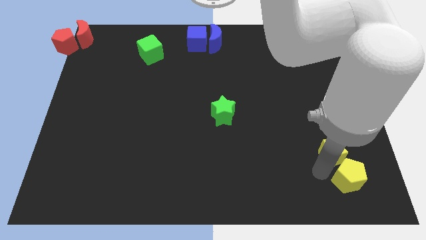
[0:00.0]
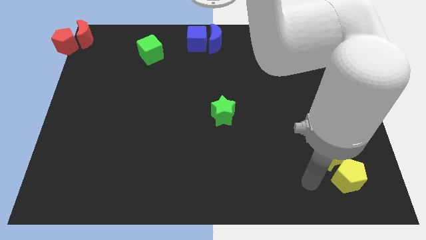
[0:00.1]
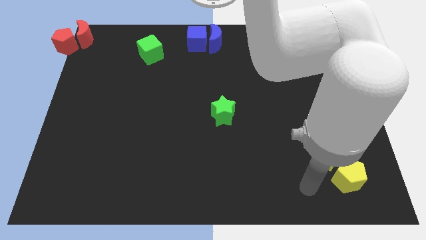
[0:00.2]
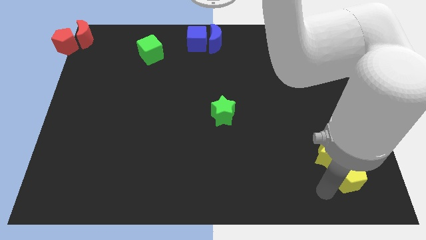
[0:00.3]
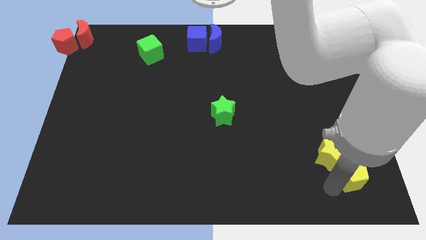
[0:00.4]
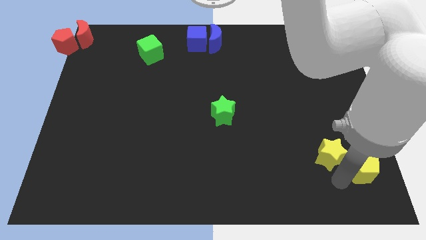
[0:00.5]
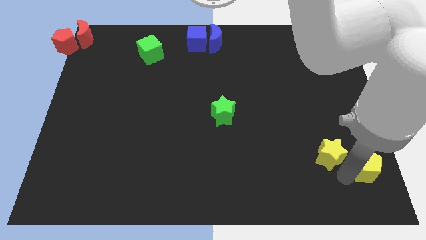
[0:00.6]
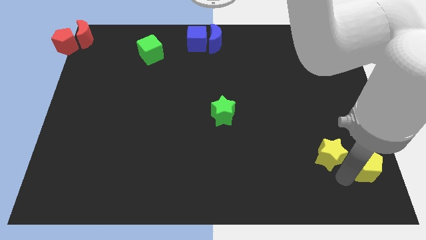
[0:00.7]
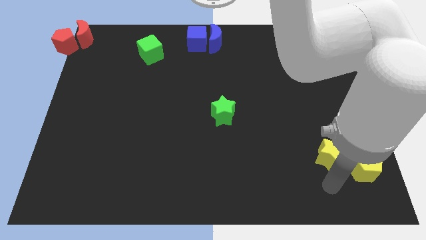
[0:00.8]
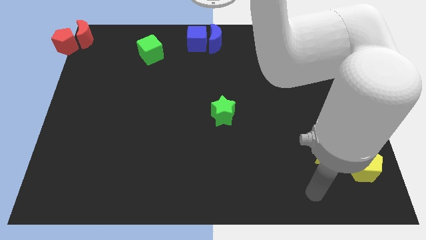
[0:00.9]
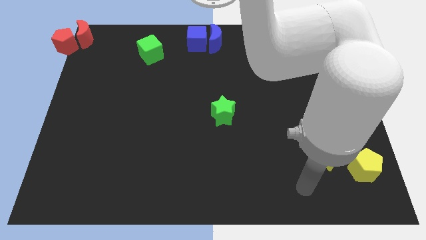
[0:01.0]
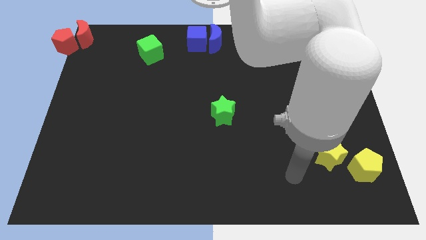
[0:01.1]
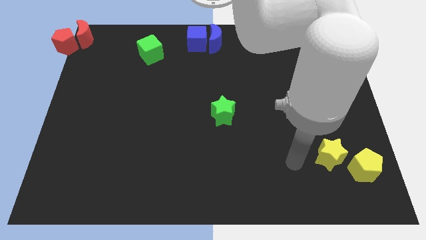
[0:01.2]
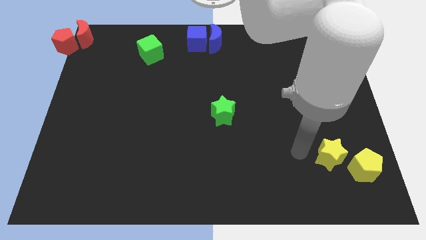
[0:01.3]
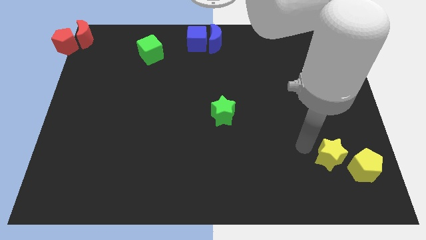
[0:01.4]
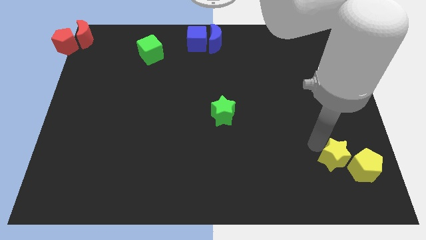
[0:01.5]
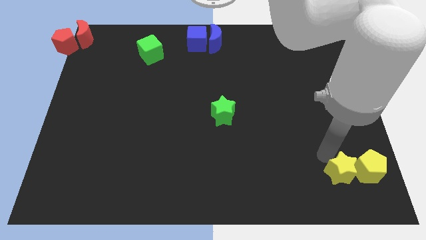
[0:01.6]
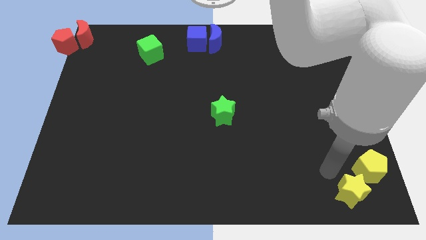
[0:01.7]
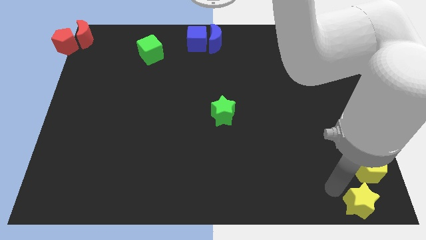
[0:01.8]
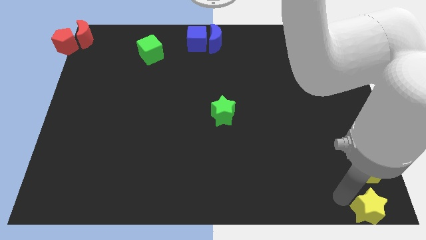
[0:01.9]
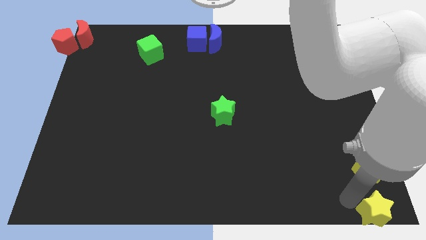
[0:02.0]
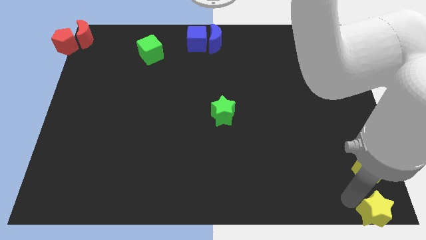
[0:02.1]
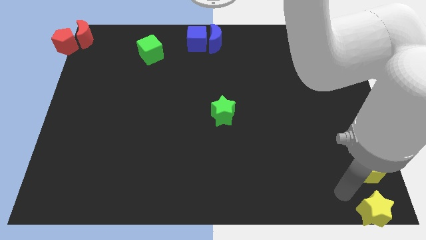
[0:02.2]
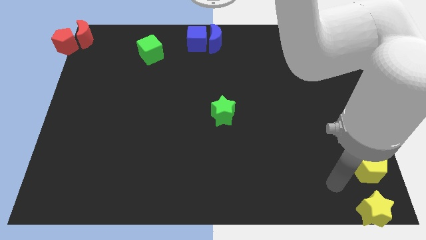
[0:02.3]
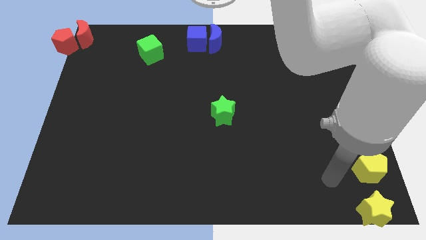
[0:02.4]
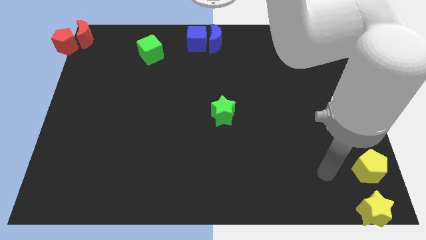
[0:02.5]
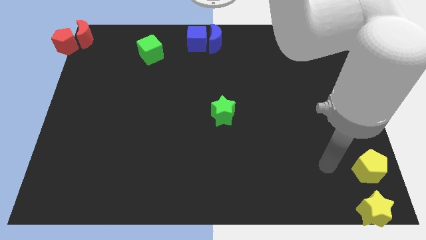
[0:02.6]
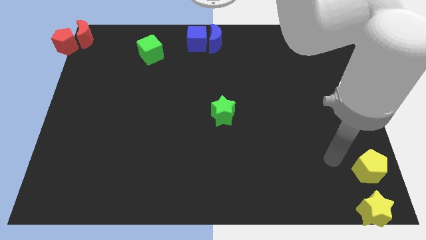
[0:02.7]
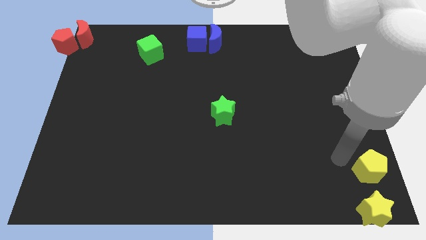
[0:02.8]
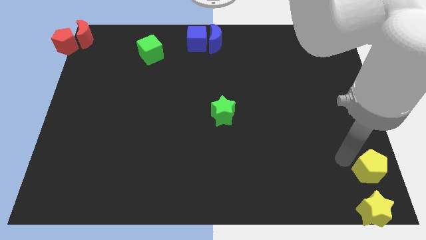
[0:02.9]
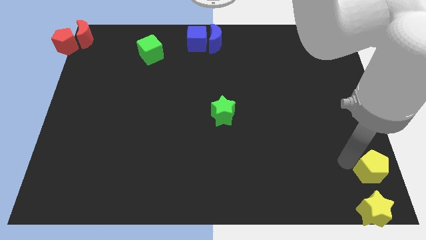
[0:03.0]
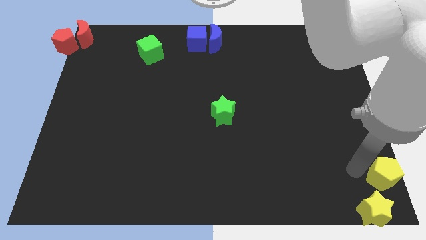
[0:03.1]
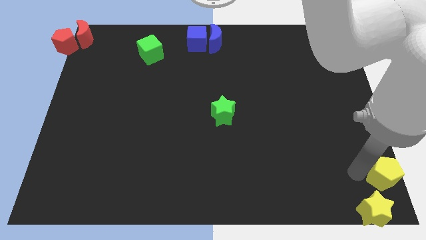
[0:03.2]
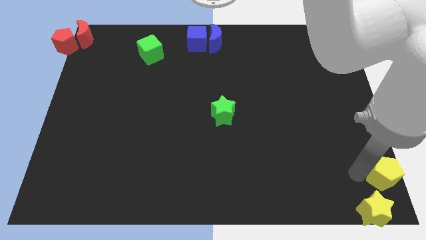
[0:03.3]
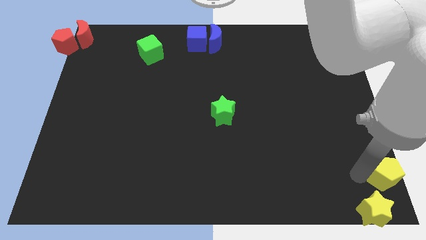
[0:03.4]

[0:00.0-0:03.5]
place the yellow pentagon and yellow star at the bottom right of the board

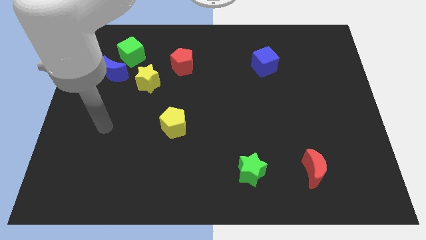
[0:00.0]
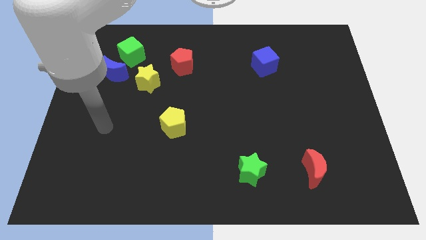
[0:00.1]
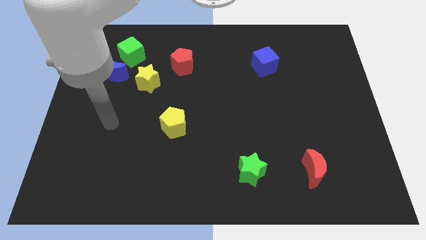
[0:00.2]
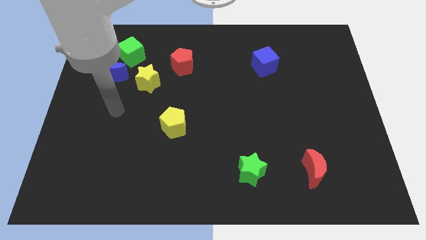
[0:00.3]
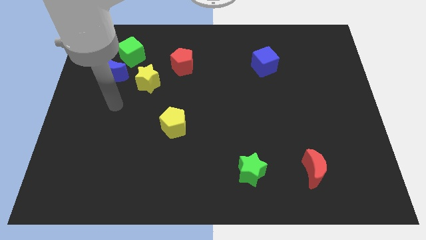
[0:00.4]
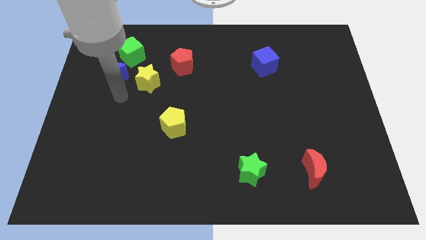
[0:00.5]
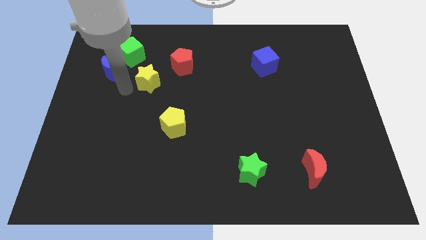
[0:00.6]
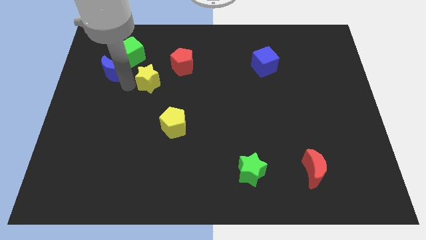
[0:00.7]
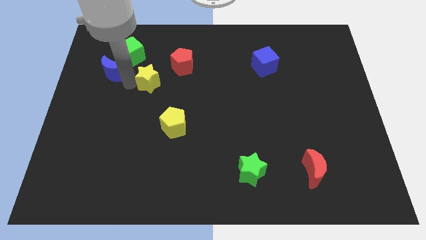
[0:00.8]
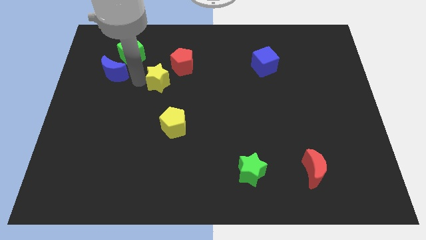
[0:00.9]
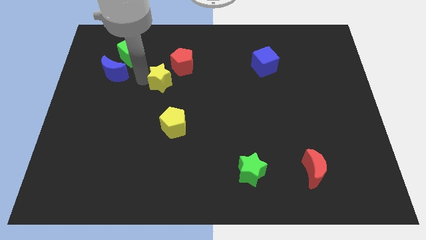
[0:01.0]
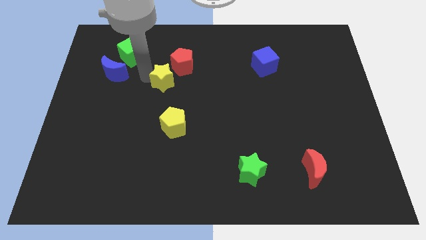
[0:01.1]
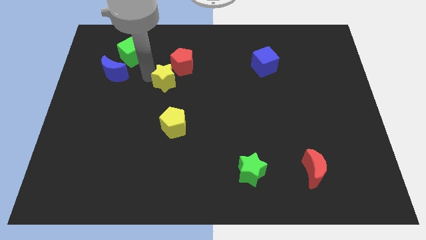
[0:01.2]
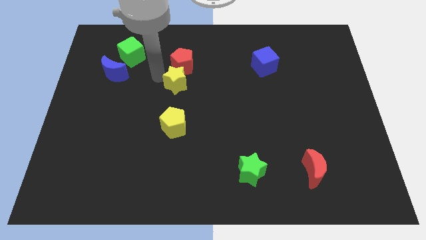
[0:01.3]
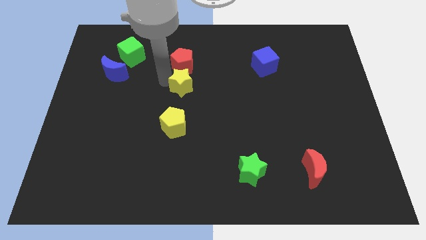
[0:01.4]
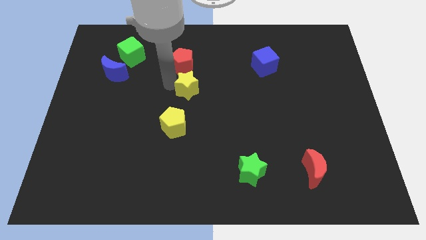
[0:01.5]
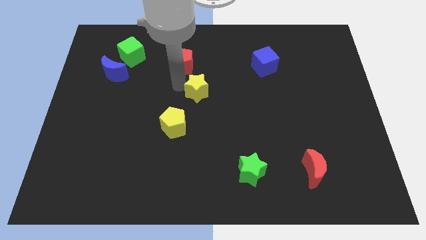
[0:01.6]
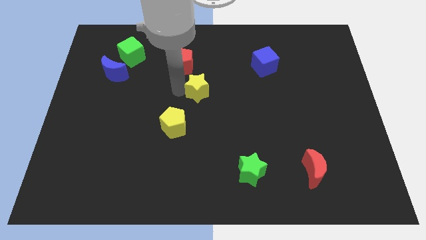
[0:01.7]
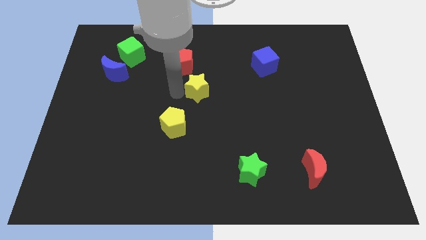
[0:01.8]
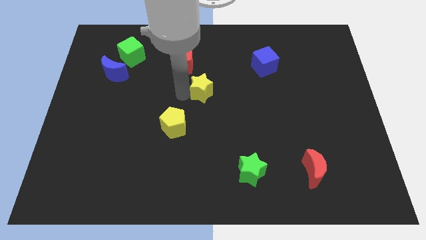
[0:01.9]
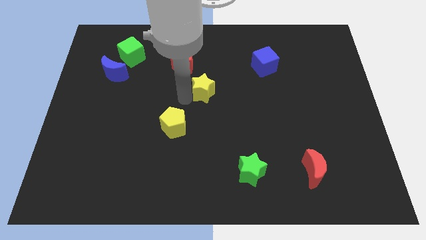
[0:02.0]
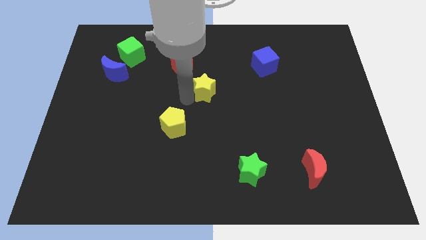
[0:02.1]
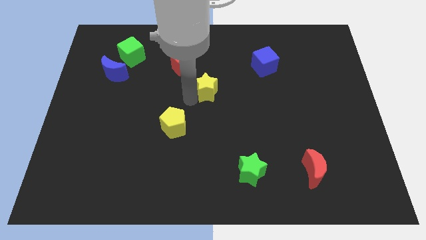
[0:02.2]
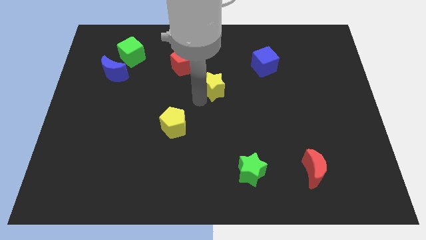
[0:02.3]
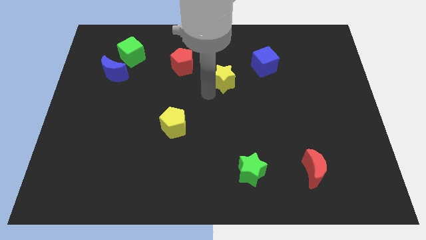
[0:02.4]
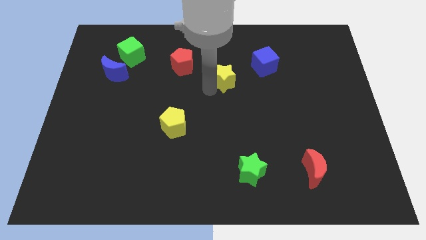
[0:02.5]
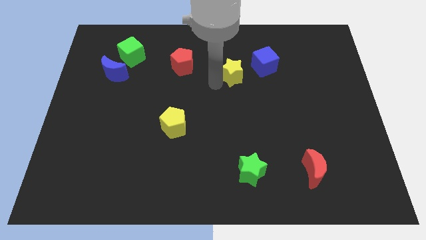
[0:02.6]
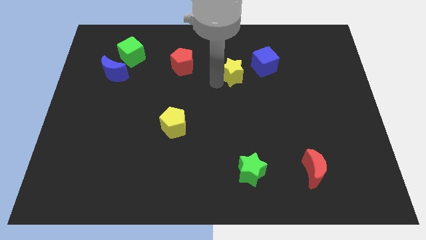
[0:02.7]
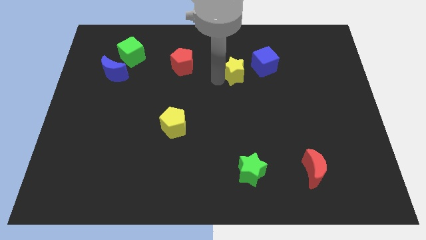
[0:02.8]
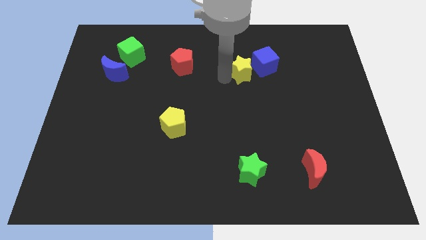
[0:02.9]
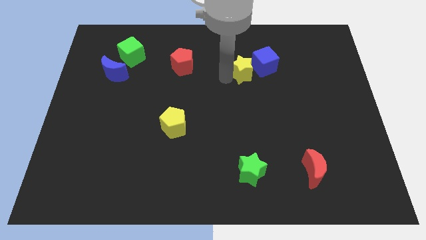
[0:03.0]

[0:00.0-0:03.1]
slide yellow star into blue cube

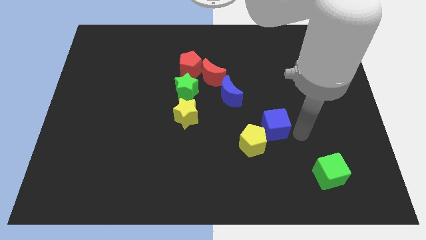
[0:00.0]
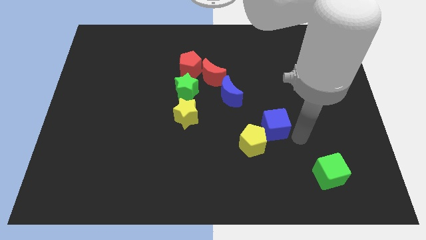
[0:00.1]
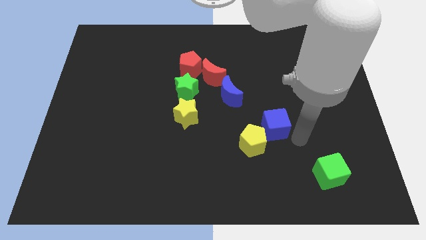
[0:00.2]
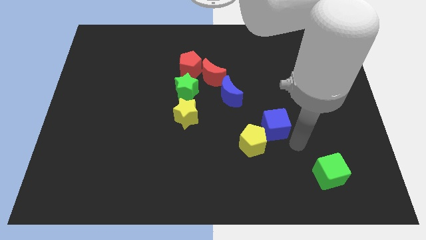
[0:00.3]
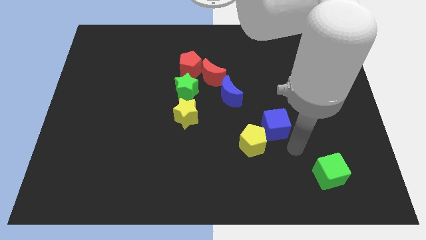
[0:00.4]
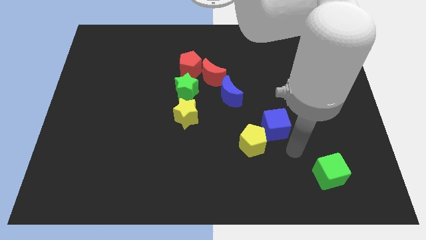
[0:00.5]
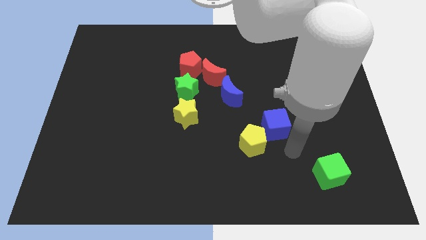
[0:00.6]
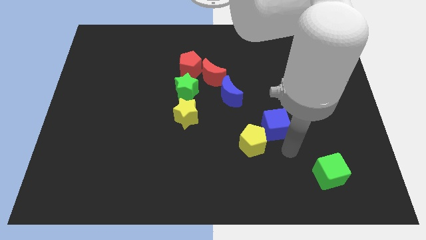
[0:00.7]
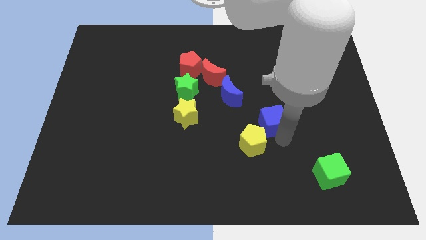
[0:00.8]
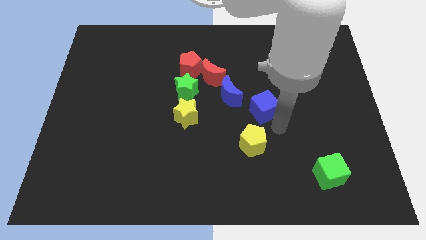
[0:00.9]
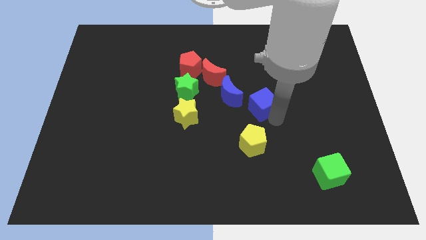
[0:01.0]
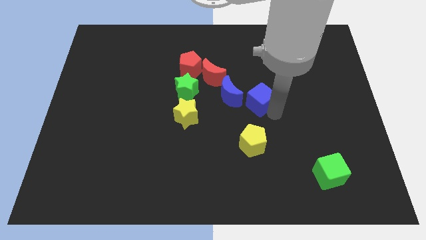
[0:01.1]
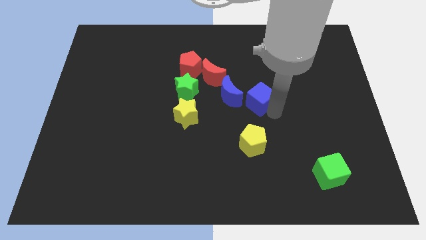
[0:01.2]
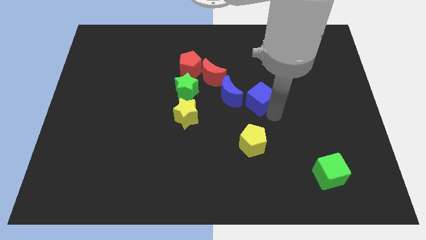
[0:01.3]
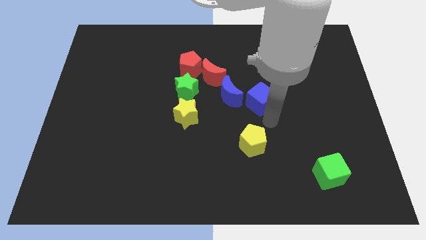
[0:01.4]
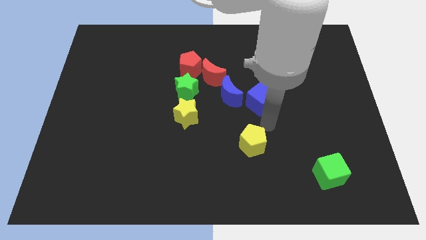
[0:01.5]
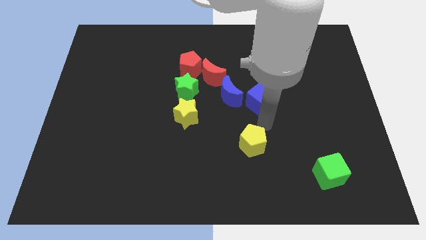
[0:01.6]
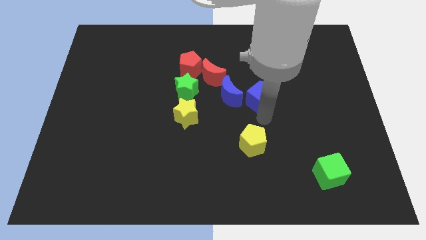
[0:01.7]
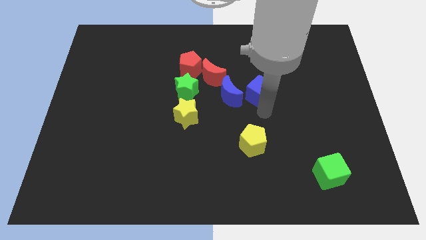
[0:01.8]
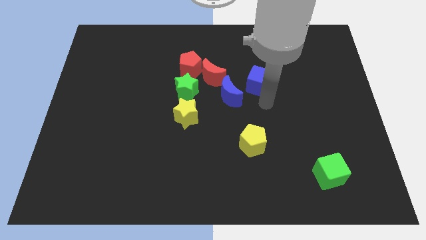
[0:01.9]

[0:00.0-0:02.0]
move the blue cube to the top right side of the blue moon

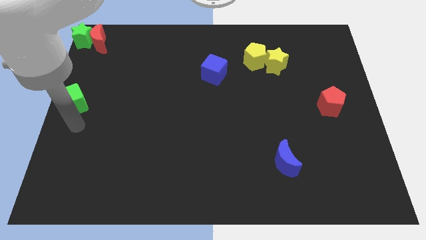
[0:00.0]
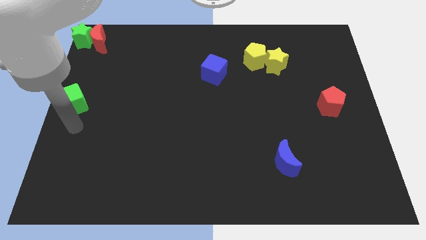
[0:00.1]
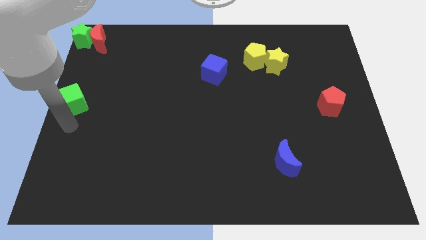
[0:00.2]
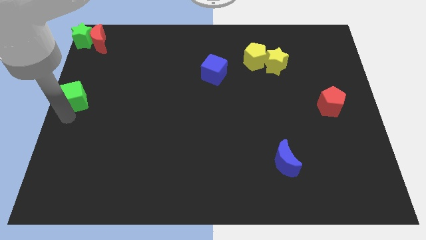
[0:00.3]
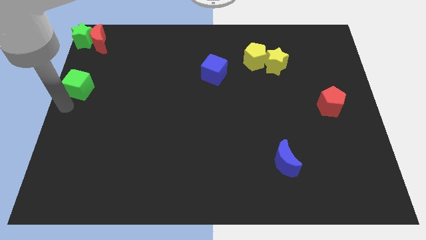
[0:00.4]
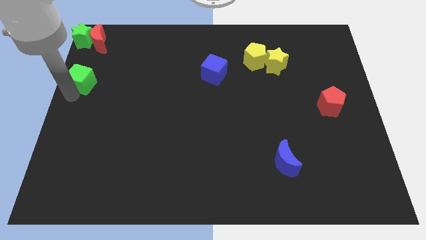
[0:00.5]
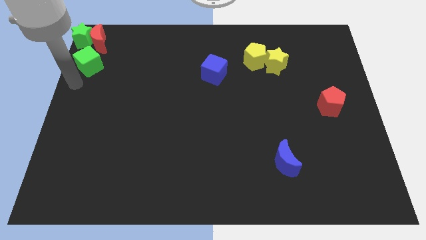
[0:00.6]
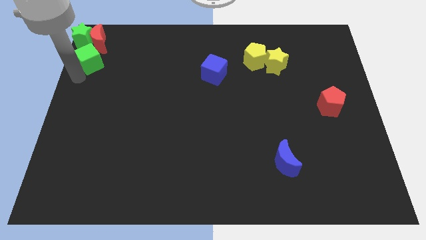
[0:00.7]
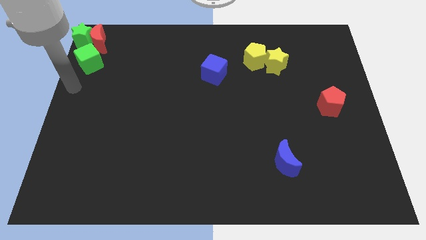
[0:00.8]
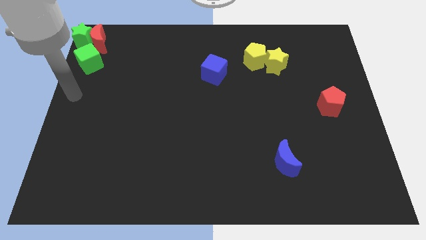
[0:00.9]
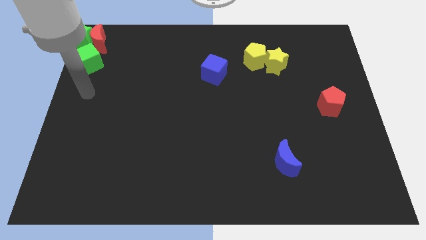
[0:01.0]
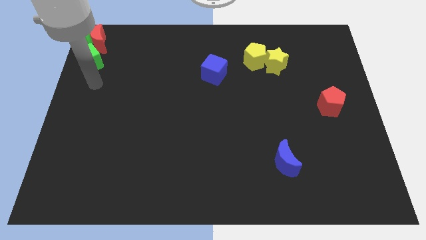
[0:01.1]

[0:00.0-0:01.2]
move the green cube vertically below to the red moon
